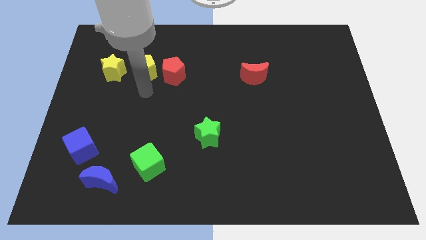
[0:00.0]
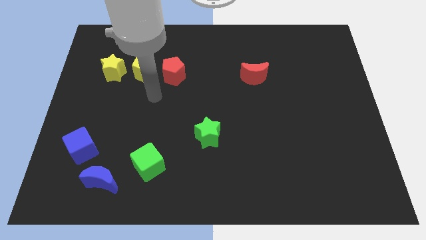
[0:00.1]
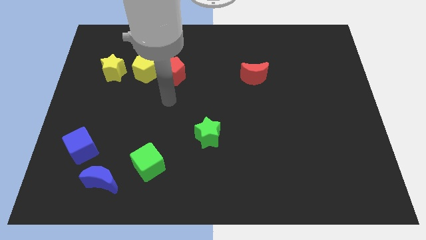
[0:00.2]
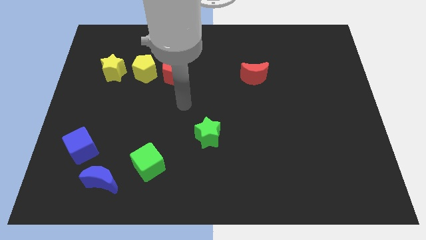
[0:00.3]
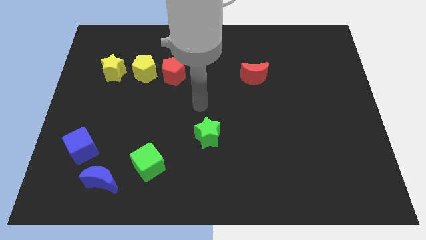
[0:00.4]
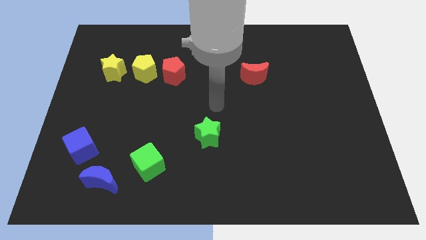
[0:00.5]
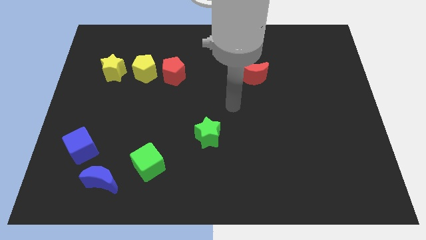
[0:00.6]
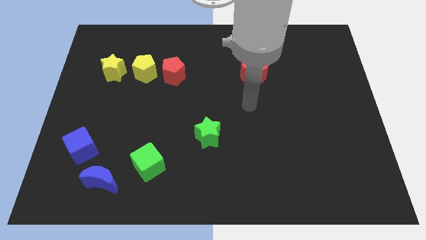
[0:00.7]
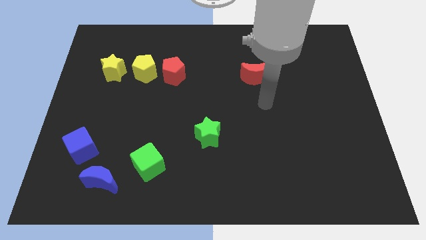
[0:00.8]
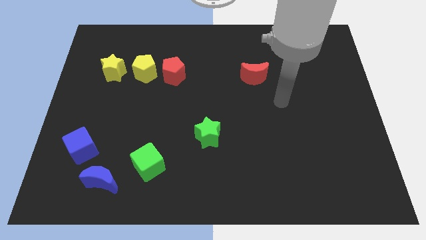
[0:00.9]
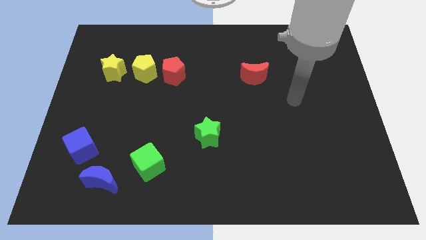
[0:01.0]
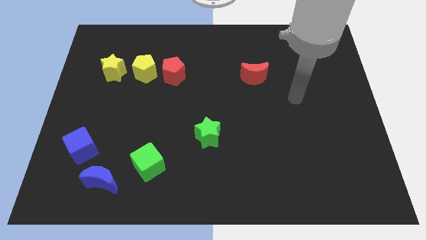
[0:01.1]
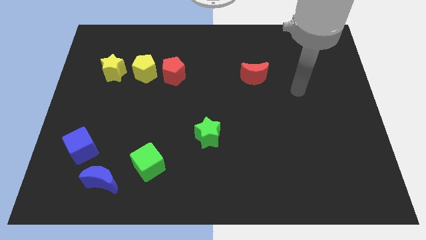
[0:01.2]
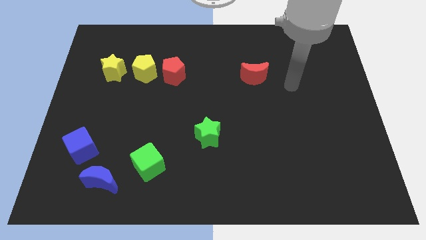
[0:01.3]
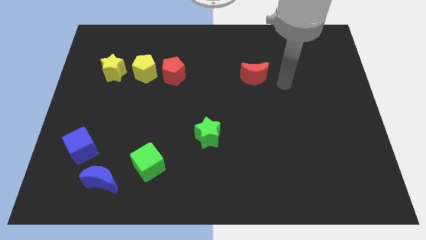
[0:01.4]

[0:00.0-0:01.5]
move your arm away from the yellow pentagon

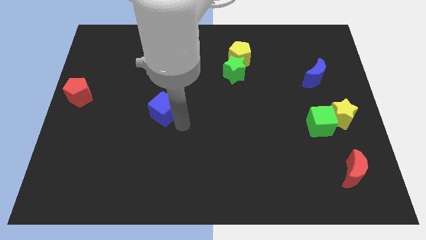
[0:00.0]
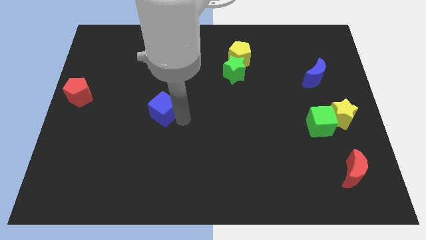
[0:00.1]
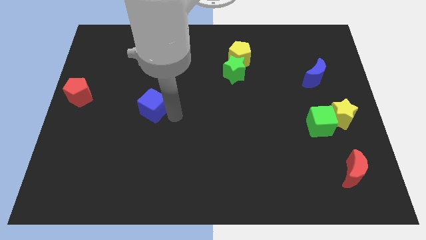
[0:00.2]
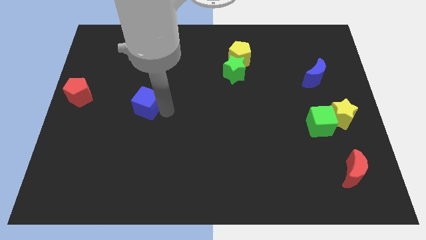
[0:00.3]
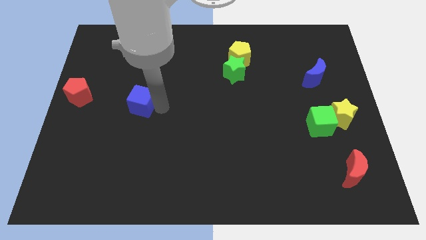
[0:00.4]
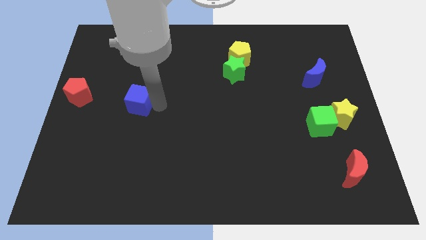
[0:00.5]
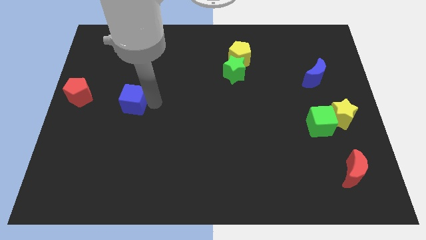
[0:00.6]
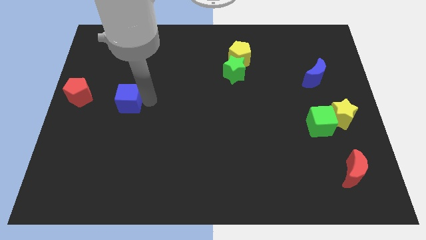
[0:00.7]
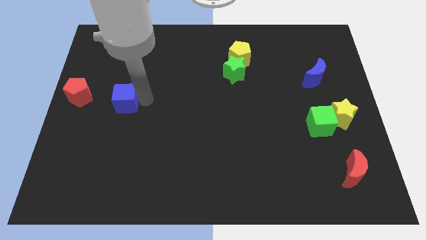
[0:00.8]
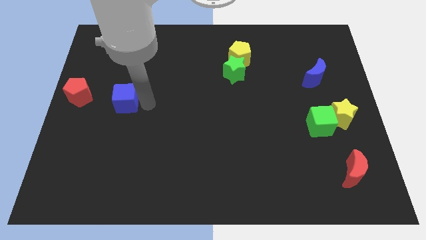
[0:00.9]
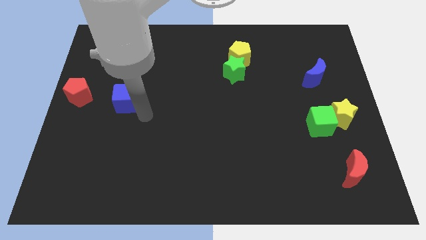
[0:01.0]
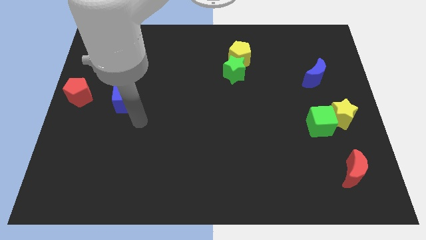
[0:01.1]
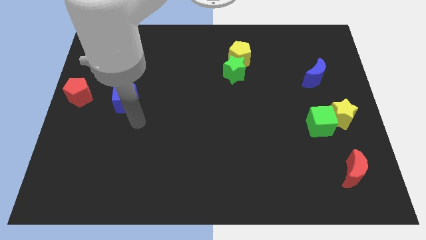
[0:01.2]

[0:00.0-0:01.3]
move to the blue cube to the left center

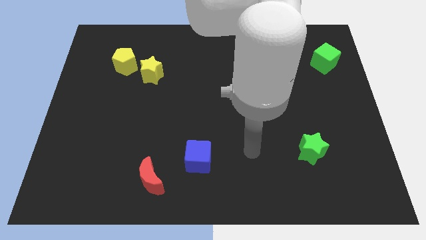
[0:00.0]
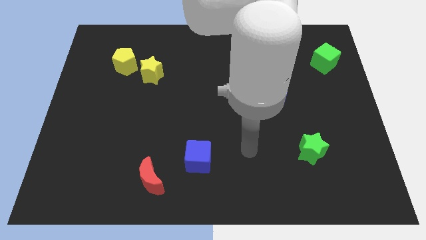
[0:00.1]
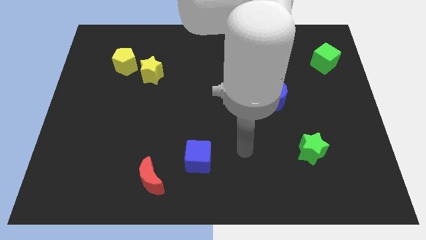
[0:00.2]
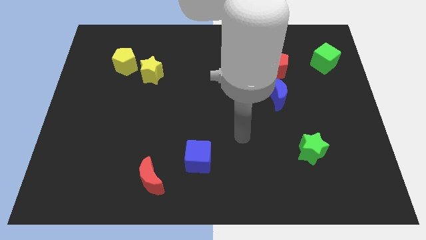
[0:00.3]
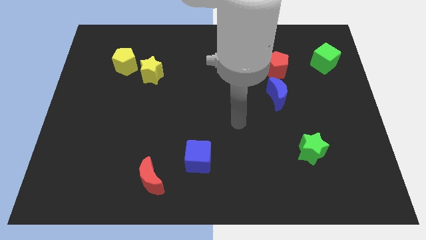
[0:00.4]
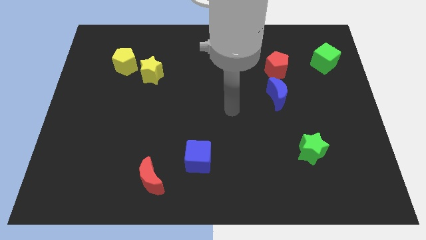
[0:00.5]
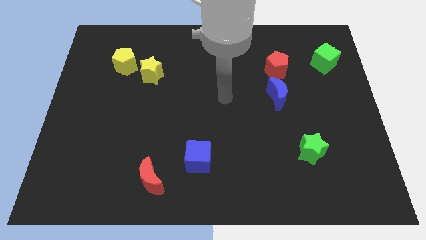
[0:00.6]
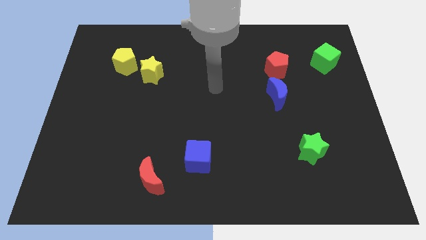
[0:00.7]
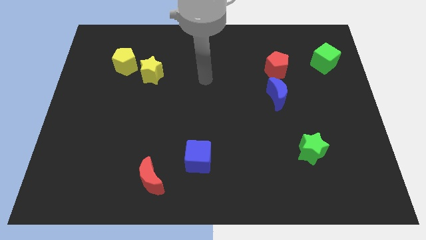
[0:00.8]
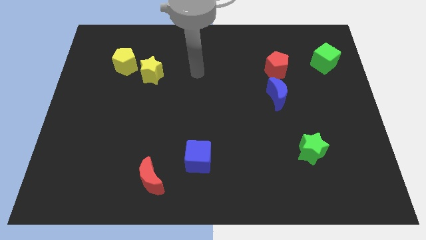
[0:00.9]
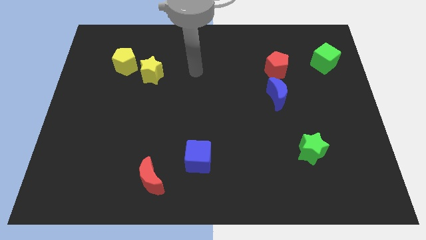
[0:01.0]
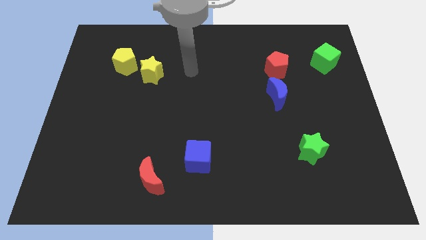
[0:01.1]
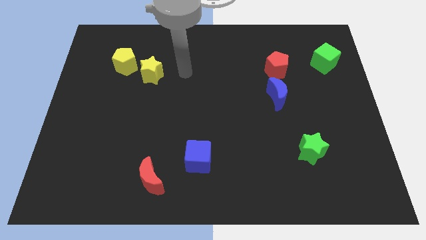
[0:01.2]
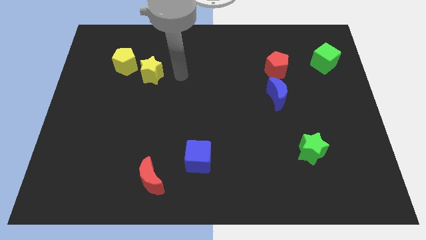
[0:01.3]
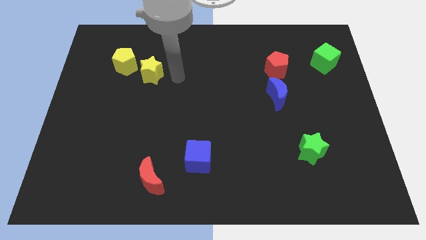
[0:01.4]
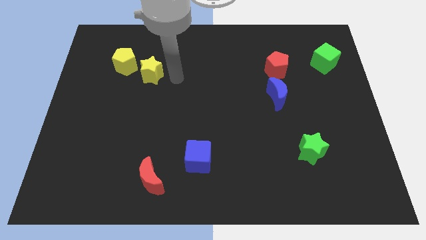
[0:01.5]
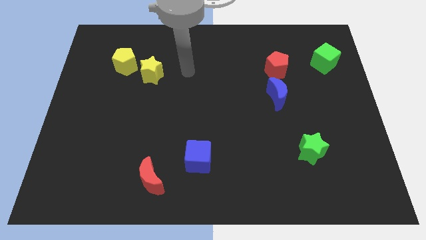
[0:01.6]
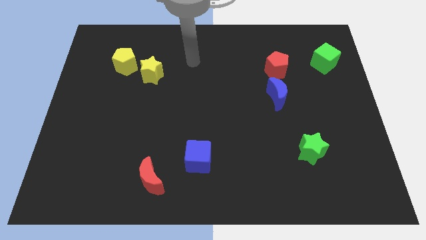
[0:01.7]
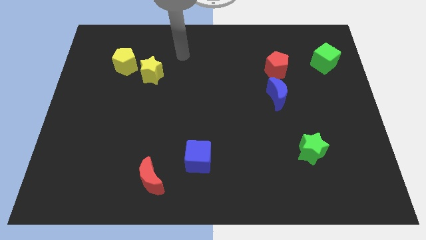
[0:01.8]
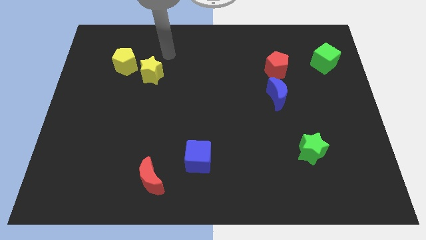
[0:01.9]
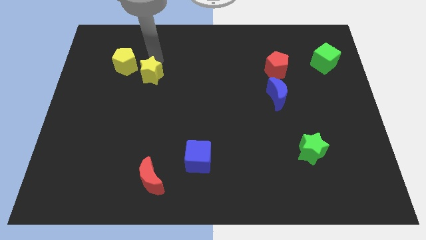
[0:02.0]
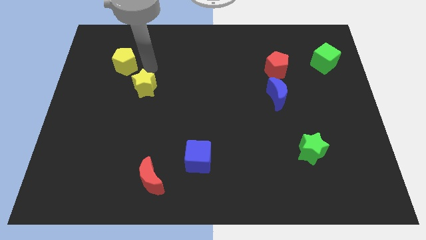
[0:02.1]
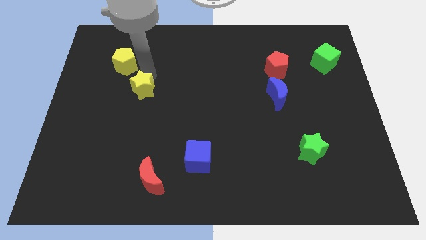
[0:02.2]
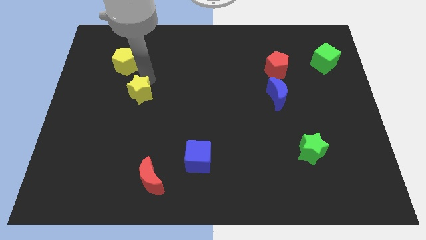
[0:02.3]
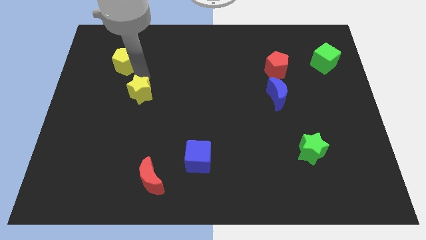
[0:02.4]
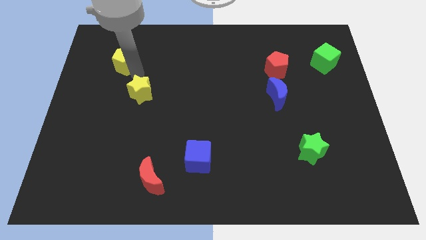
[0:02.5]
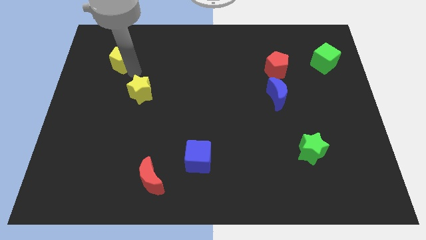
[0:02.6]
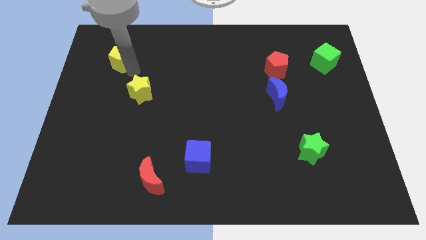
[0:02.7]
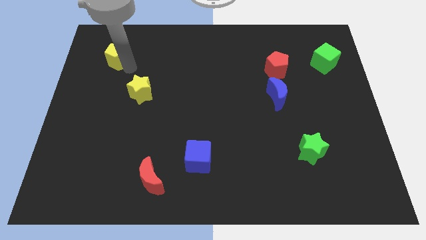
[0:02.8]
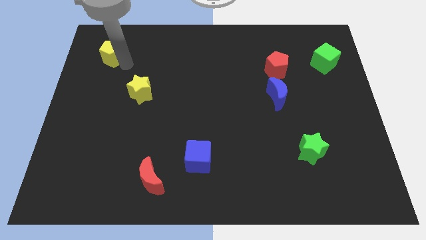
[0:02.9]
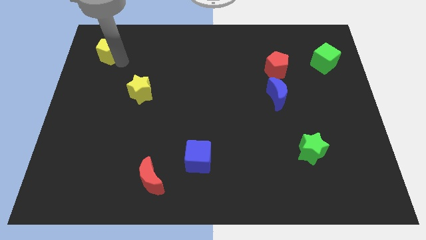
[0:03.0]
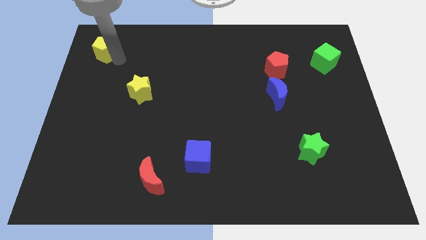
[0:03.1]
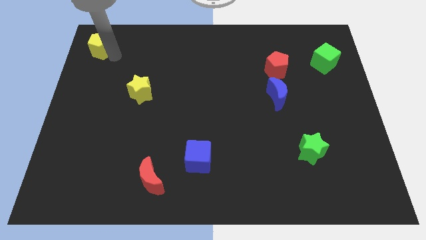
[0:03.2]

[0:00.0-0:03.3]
separate the yellow blocks each others

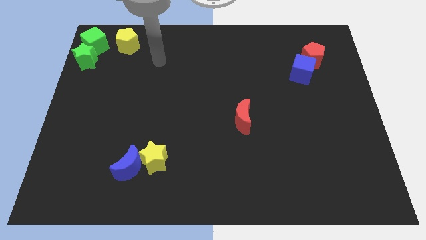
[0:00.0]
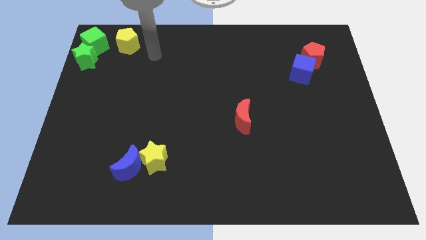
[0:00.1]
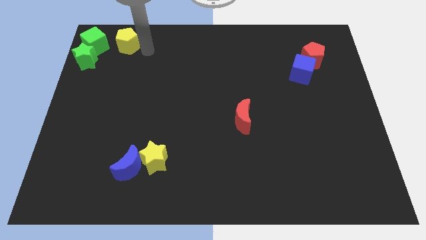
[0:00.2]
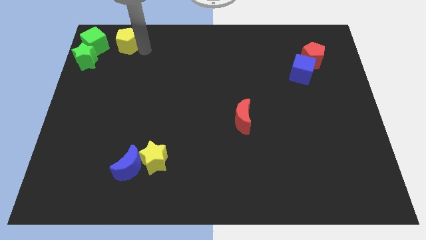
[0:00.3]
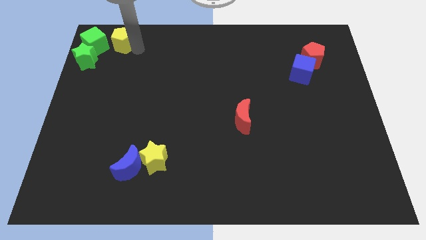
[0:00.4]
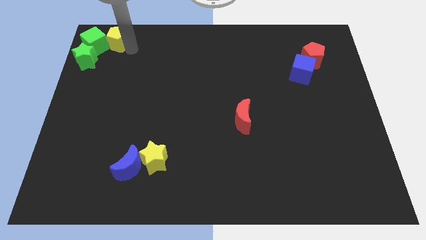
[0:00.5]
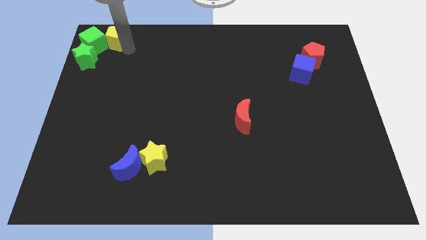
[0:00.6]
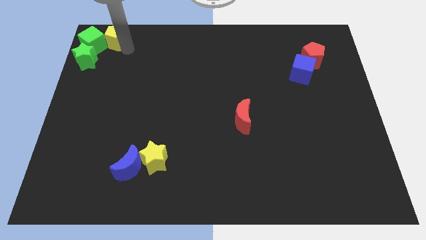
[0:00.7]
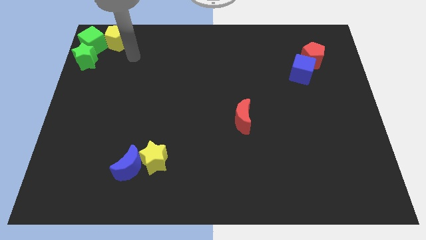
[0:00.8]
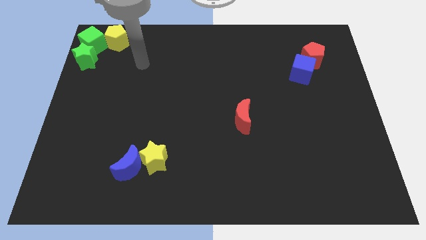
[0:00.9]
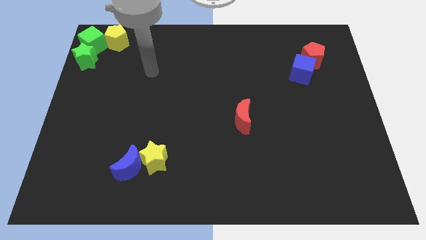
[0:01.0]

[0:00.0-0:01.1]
push the yellow pentagon into the green cube

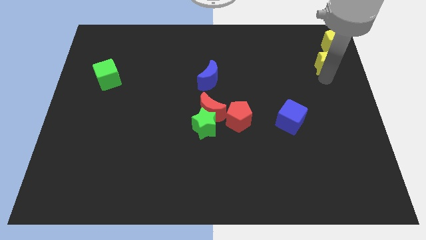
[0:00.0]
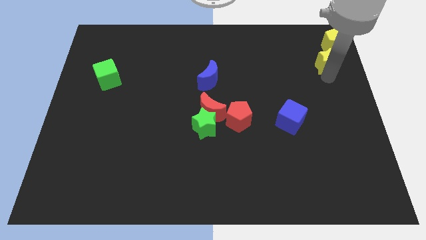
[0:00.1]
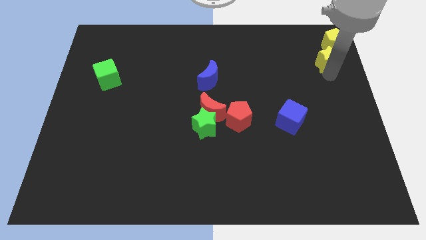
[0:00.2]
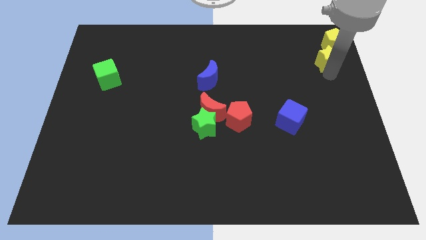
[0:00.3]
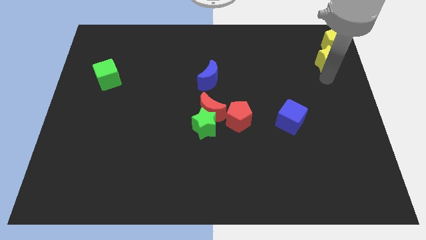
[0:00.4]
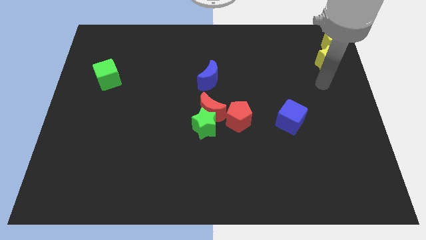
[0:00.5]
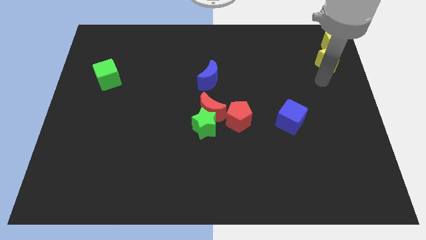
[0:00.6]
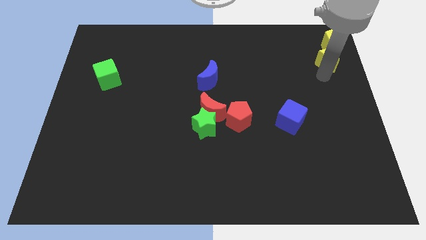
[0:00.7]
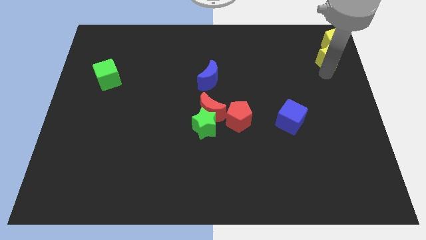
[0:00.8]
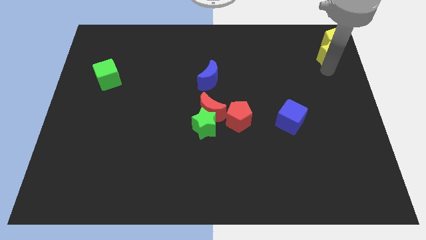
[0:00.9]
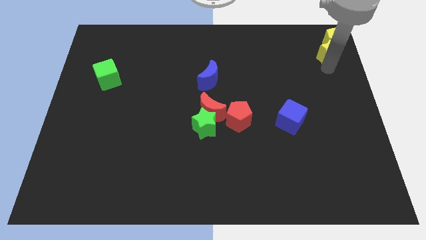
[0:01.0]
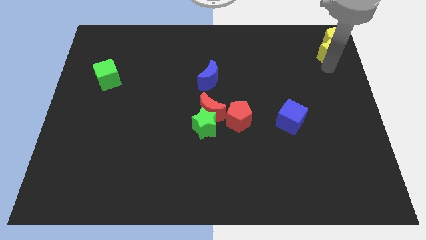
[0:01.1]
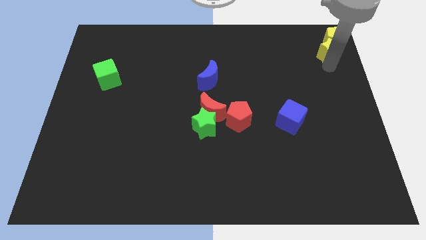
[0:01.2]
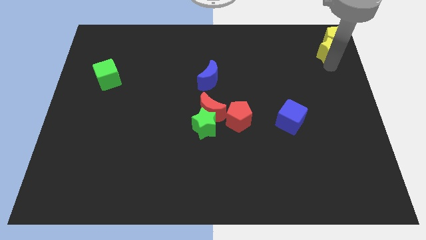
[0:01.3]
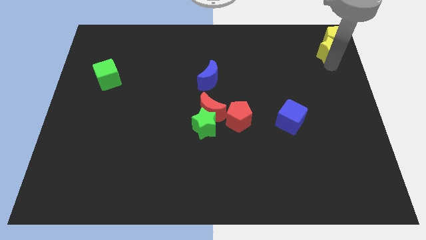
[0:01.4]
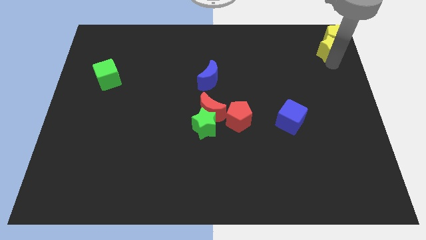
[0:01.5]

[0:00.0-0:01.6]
place the yellow blocks at the top right corner of the board
